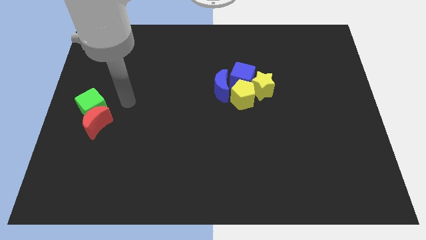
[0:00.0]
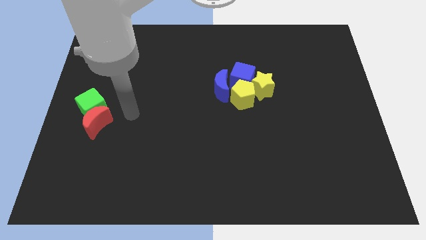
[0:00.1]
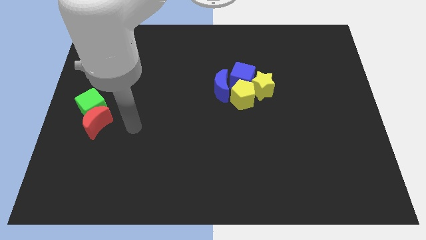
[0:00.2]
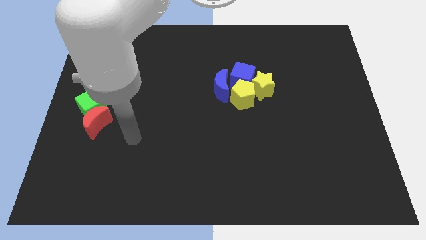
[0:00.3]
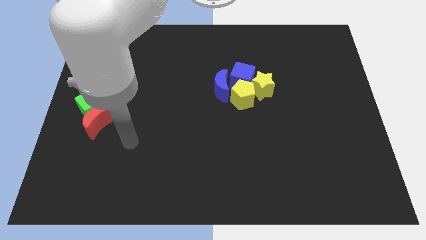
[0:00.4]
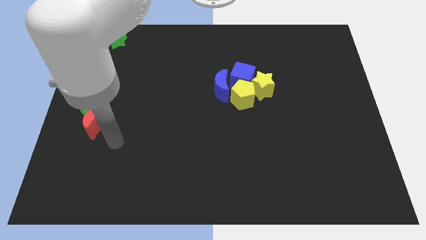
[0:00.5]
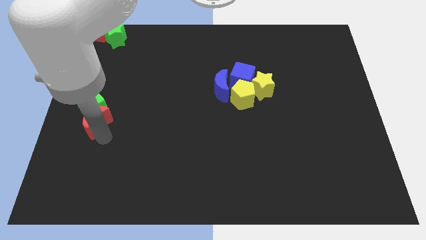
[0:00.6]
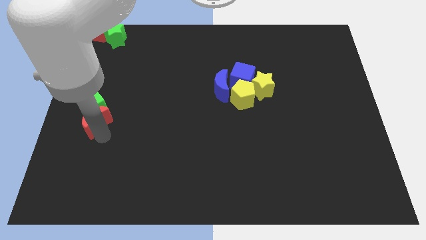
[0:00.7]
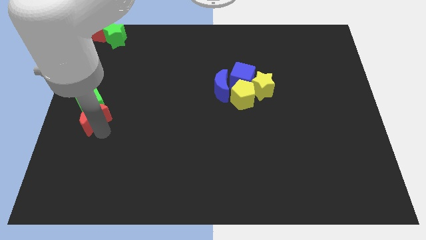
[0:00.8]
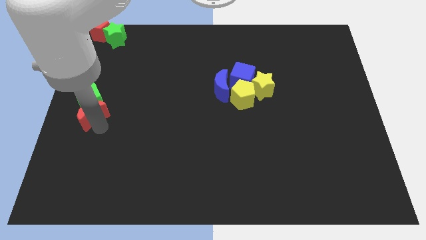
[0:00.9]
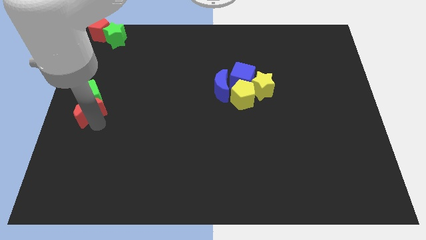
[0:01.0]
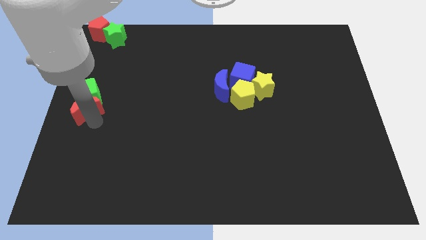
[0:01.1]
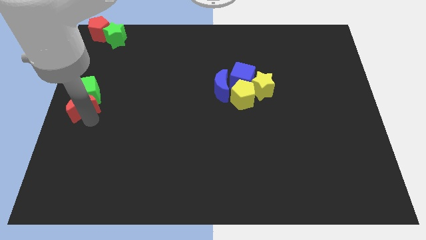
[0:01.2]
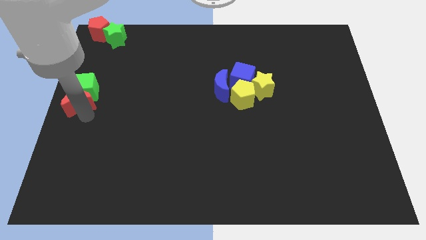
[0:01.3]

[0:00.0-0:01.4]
push the red crescent into the green cube

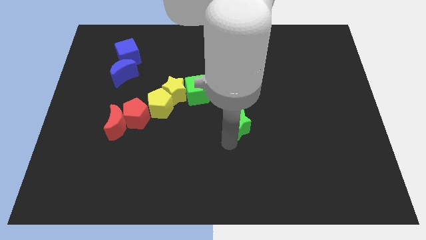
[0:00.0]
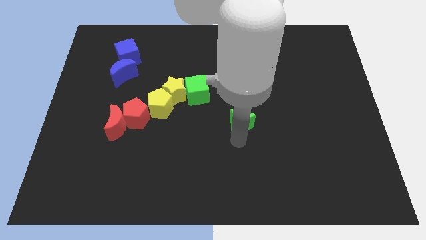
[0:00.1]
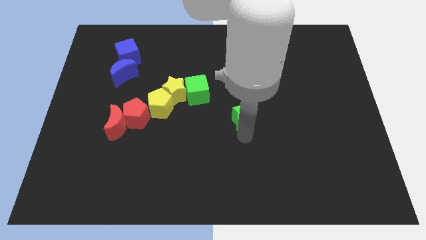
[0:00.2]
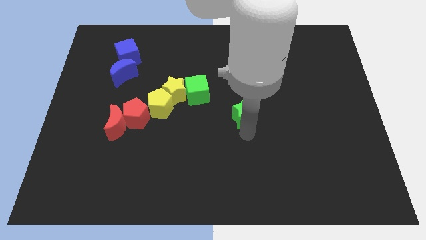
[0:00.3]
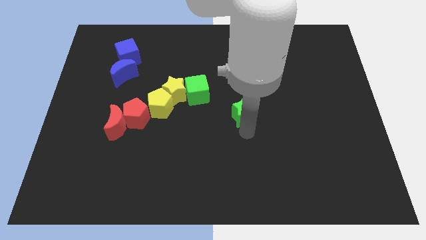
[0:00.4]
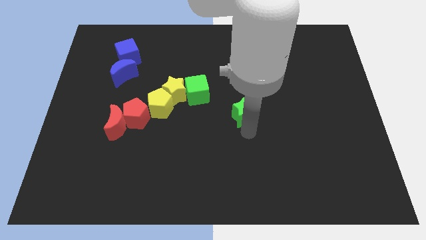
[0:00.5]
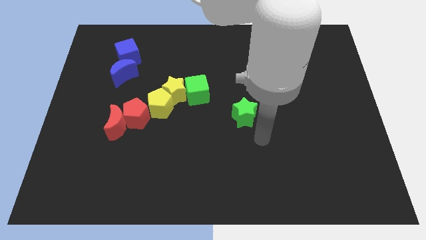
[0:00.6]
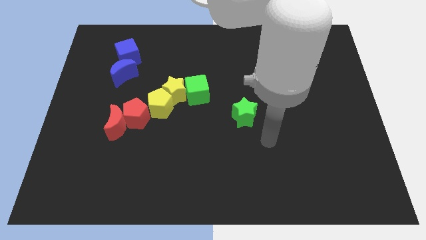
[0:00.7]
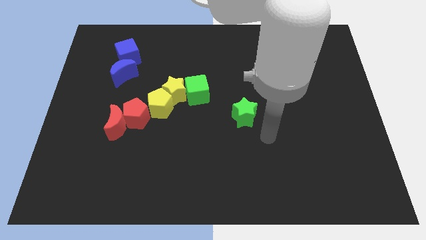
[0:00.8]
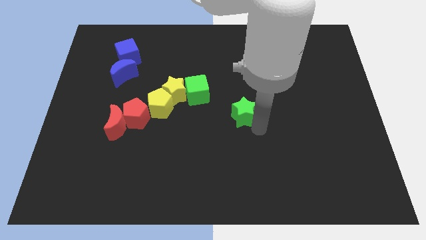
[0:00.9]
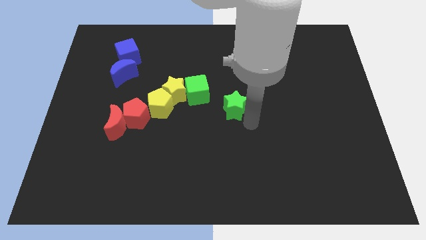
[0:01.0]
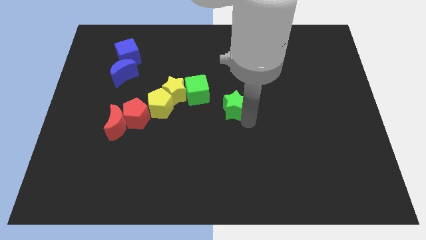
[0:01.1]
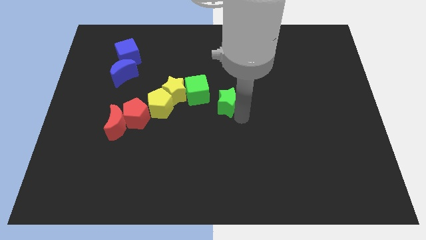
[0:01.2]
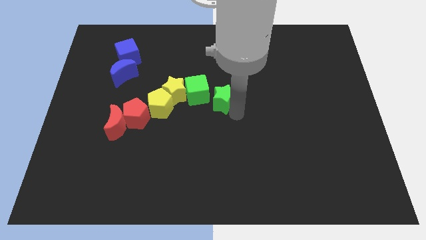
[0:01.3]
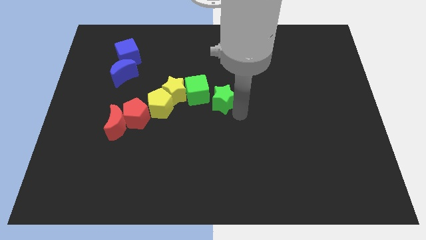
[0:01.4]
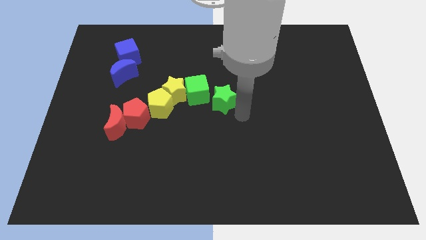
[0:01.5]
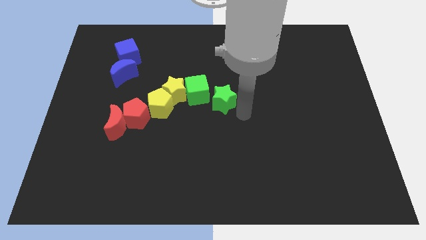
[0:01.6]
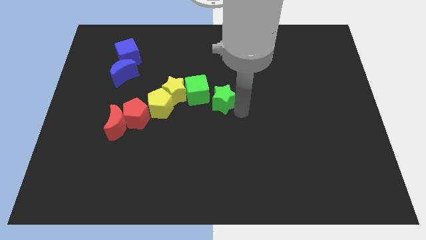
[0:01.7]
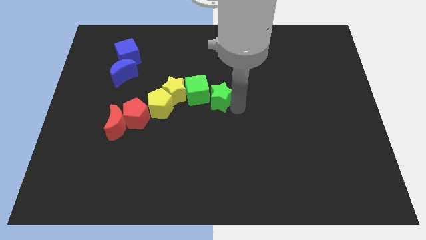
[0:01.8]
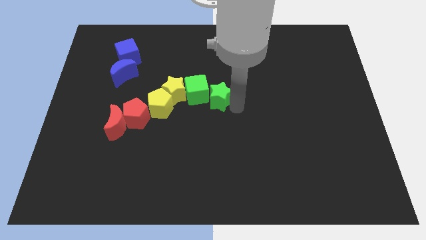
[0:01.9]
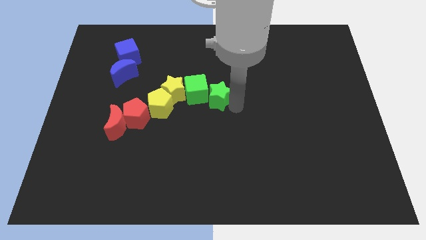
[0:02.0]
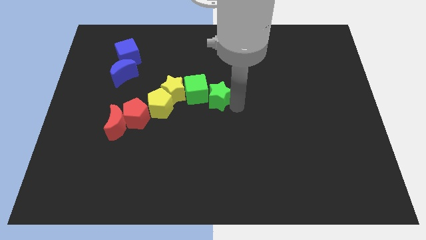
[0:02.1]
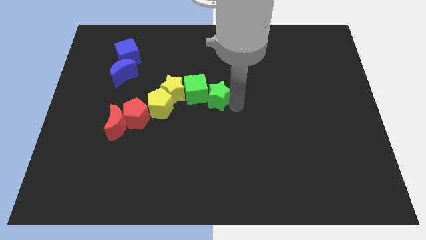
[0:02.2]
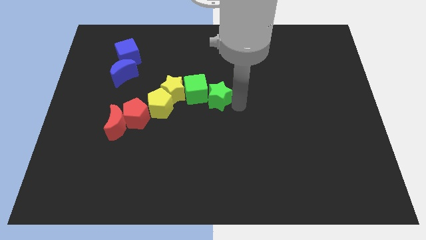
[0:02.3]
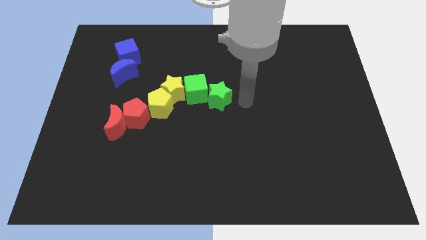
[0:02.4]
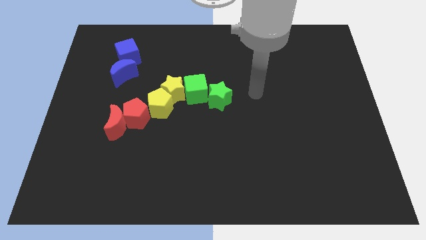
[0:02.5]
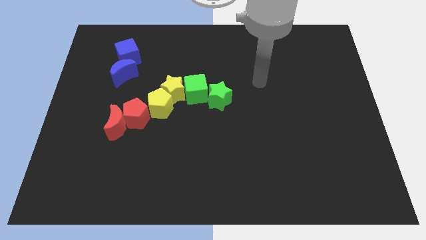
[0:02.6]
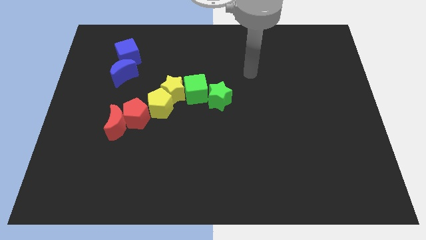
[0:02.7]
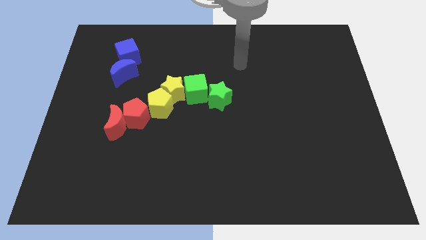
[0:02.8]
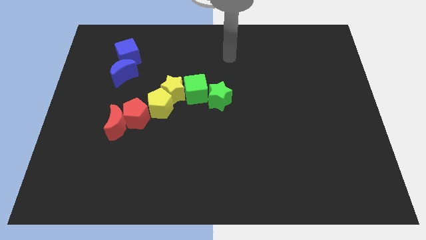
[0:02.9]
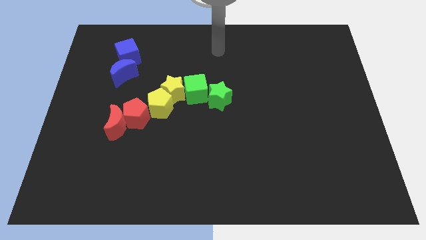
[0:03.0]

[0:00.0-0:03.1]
take the green star into the bottom right side of the green cube

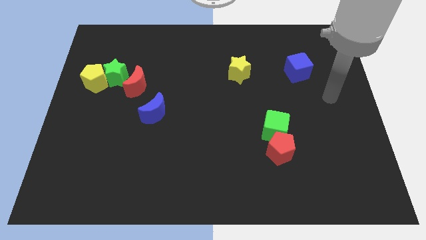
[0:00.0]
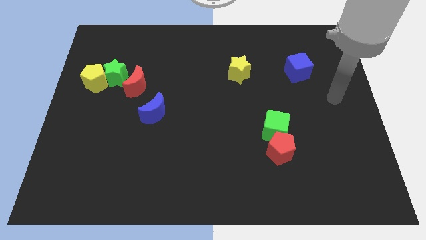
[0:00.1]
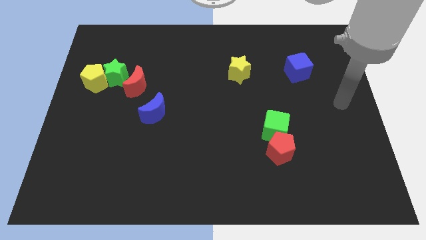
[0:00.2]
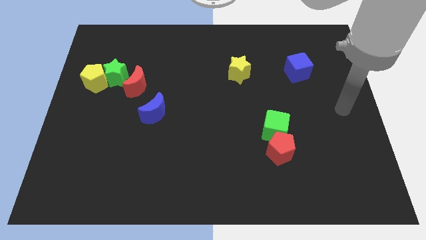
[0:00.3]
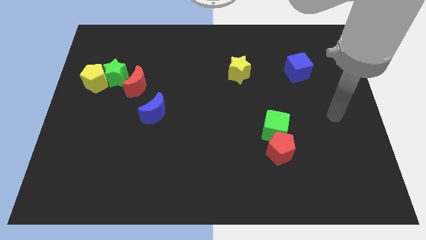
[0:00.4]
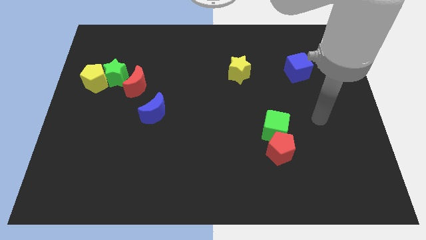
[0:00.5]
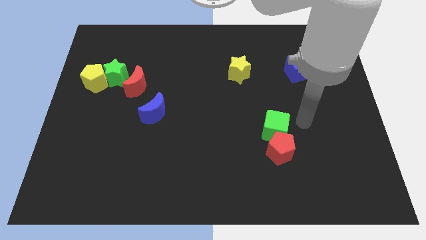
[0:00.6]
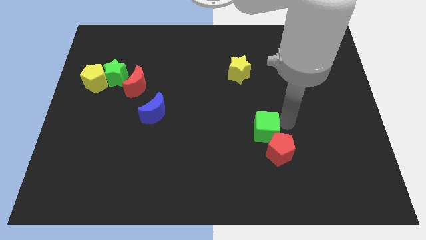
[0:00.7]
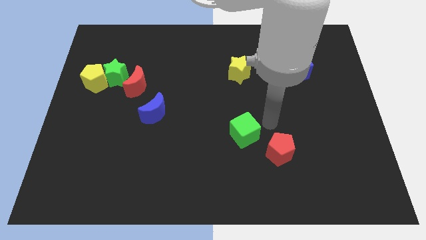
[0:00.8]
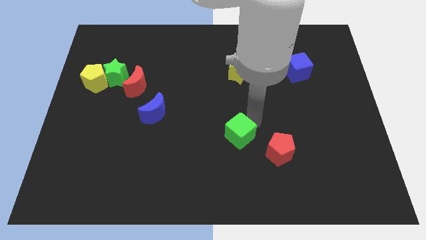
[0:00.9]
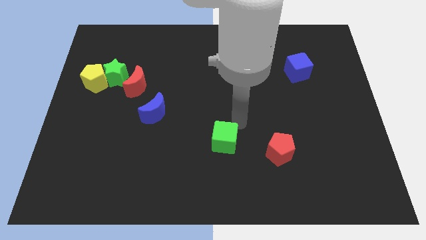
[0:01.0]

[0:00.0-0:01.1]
separate the green cube from the red pentagon

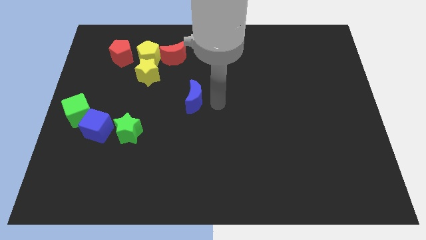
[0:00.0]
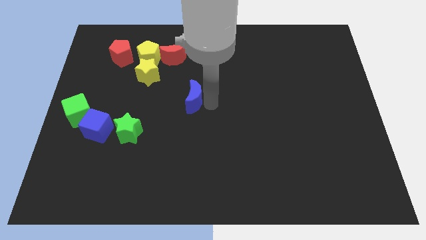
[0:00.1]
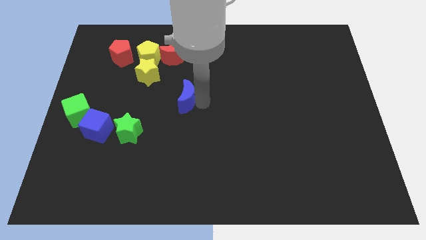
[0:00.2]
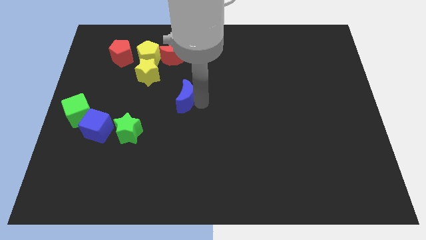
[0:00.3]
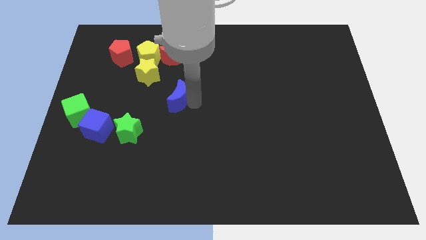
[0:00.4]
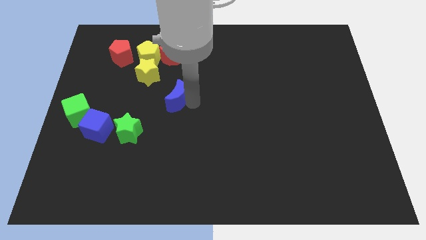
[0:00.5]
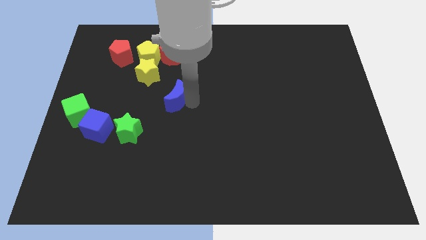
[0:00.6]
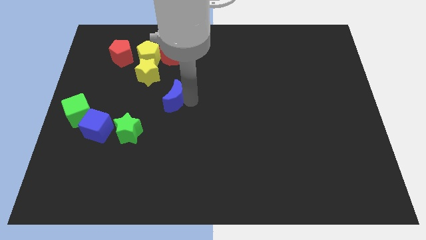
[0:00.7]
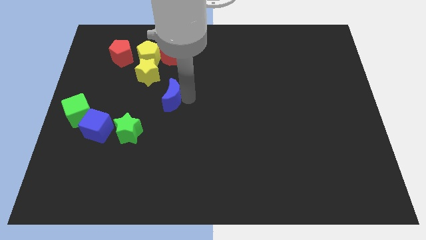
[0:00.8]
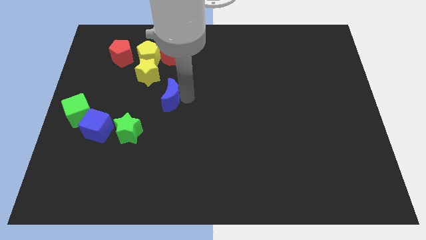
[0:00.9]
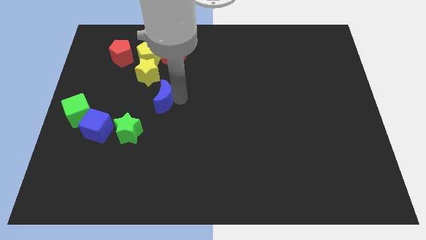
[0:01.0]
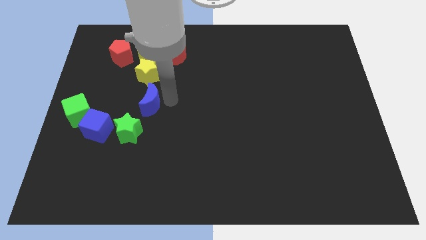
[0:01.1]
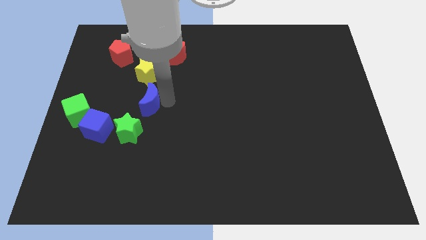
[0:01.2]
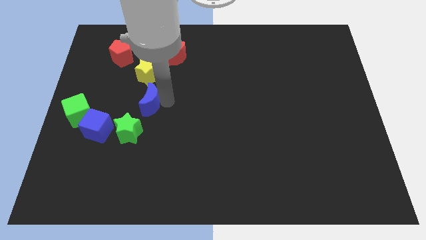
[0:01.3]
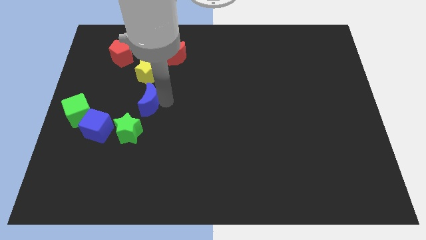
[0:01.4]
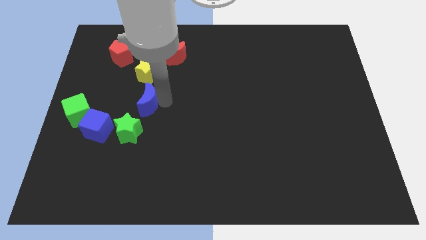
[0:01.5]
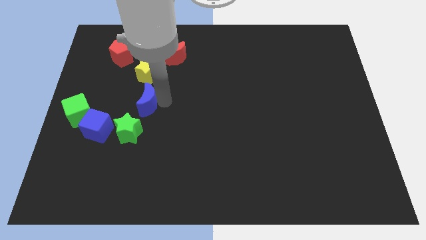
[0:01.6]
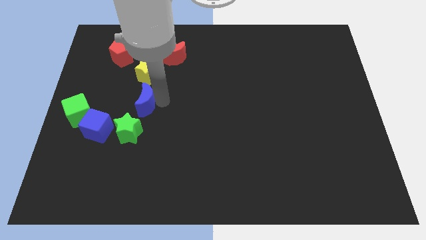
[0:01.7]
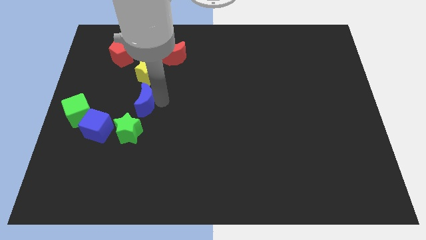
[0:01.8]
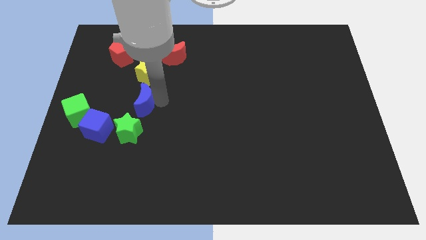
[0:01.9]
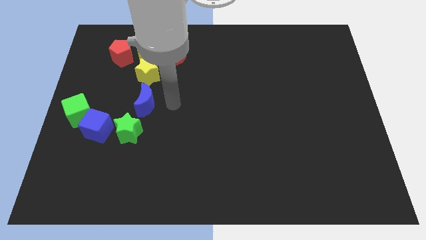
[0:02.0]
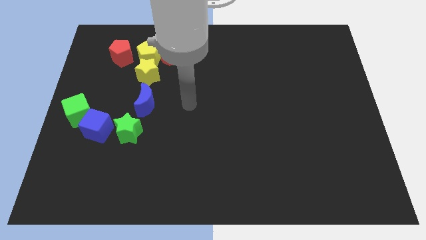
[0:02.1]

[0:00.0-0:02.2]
put the blue moon between the yellow star and green star

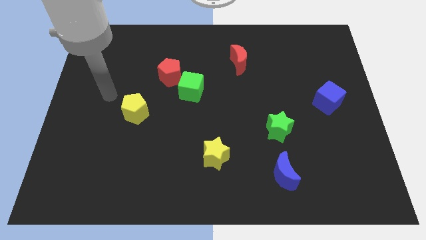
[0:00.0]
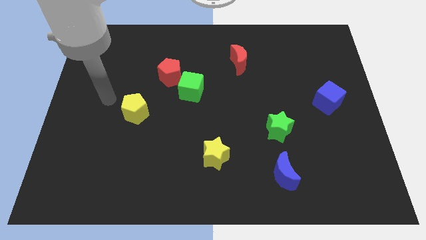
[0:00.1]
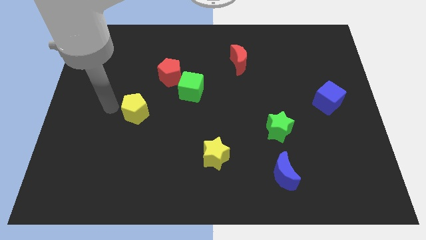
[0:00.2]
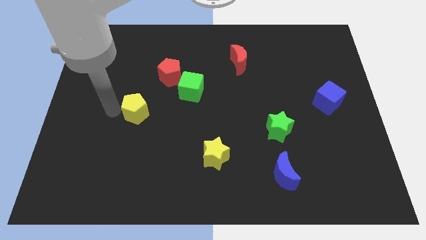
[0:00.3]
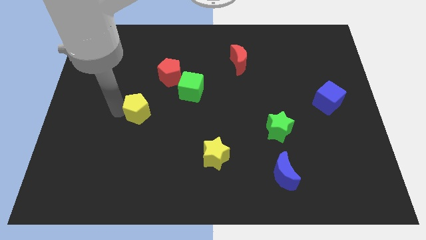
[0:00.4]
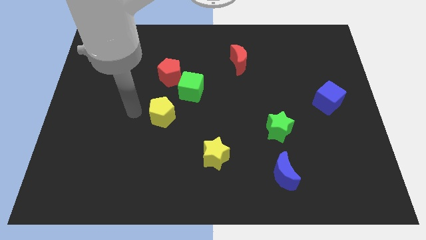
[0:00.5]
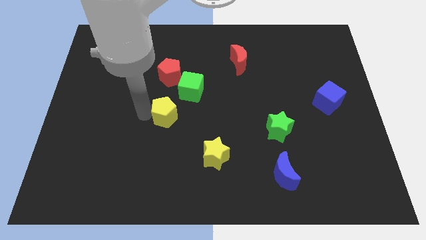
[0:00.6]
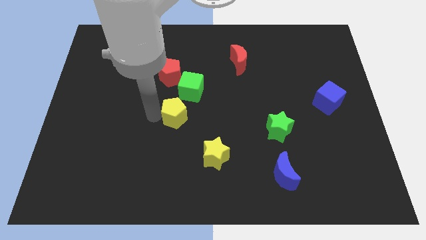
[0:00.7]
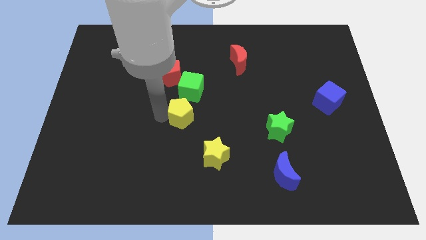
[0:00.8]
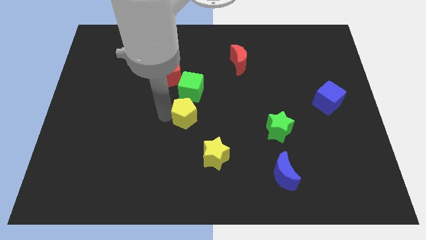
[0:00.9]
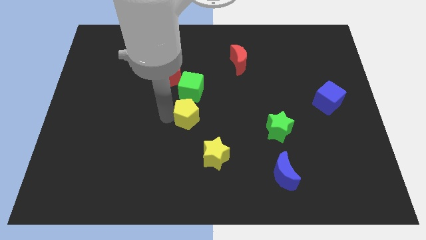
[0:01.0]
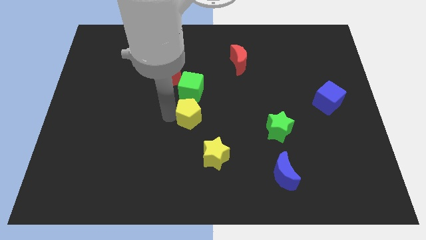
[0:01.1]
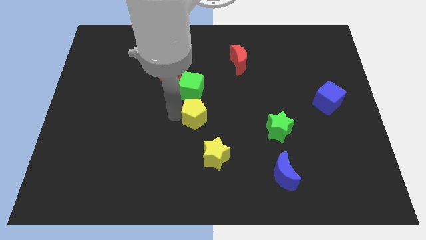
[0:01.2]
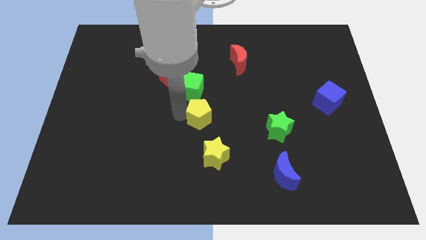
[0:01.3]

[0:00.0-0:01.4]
place the yellow pentagon to the bottom of green cube
